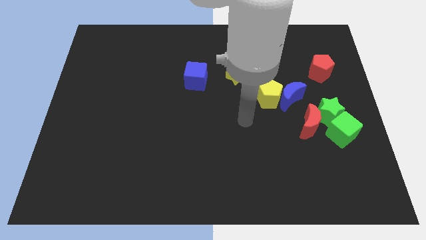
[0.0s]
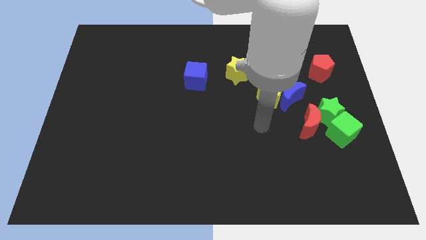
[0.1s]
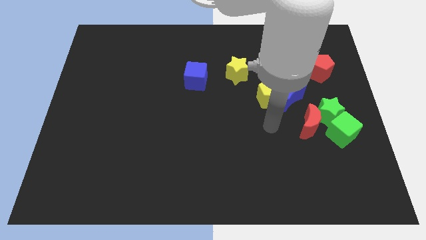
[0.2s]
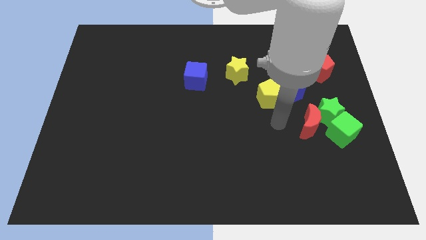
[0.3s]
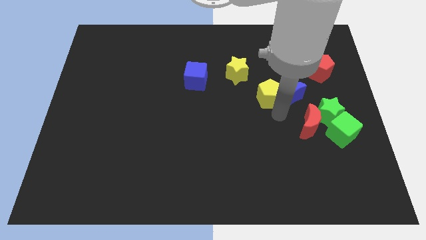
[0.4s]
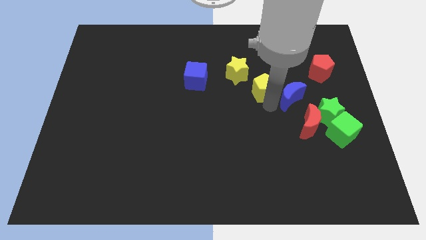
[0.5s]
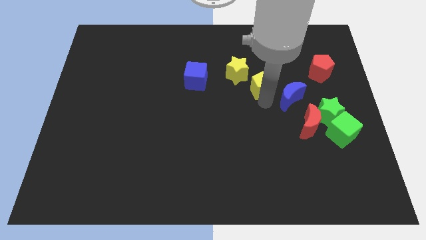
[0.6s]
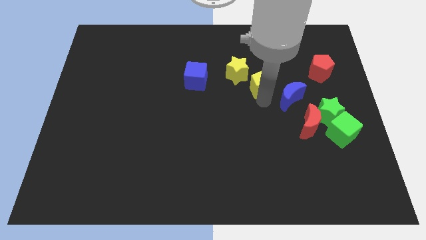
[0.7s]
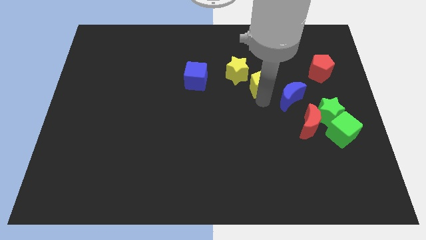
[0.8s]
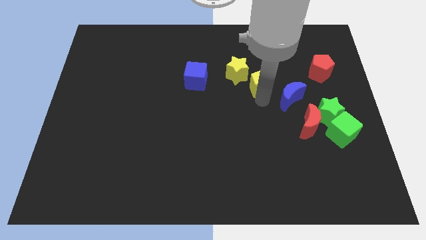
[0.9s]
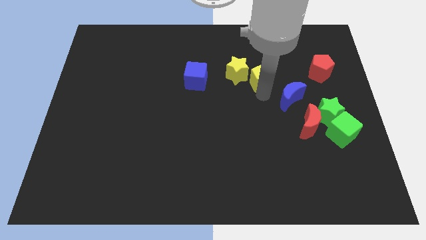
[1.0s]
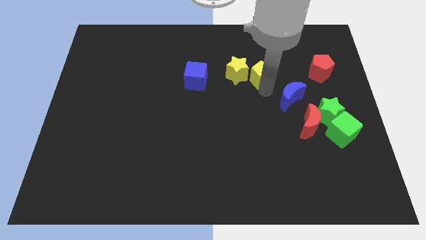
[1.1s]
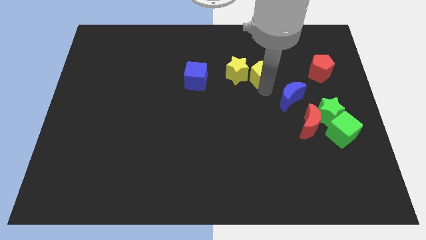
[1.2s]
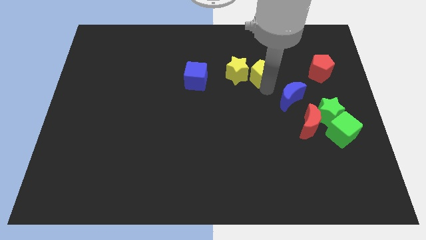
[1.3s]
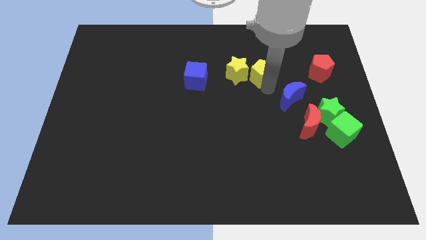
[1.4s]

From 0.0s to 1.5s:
move the yellow pentagon to the right of the yellow star

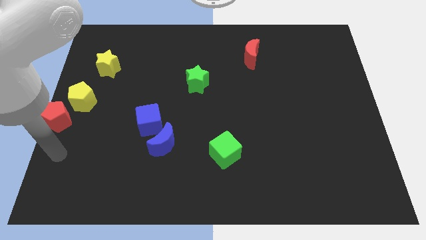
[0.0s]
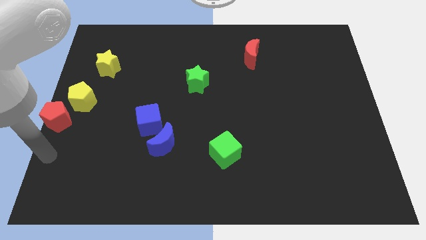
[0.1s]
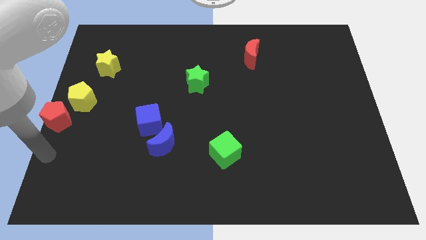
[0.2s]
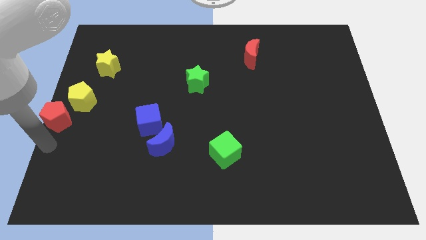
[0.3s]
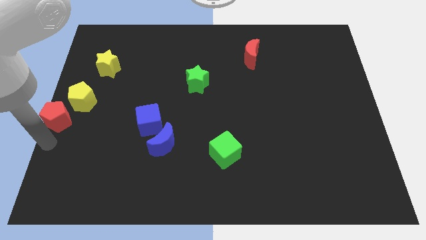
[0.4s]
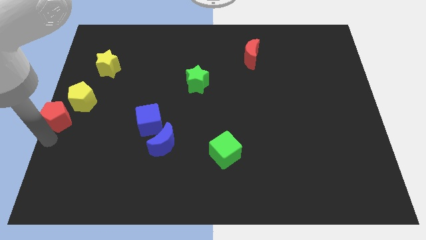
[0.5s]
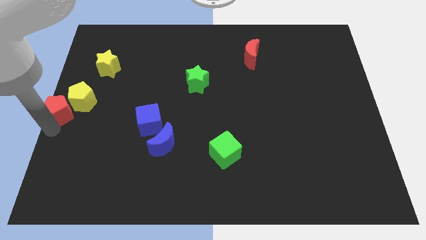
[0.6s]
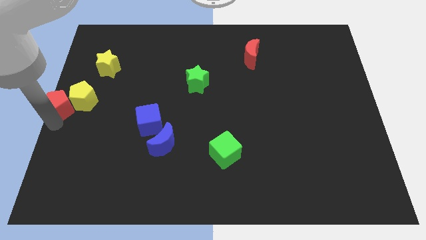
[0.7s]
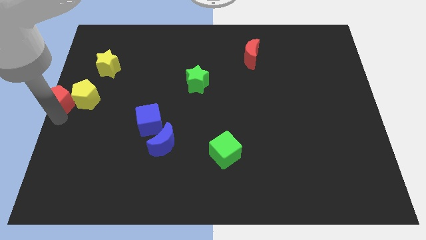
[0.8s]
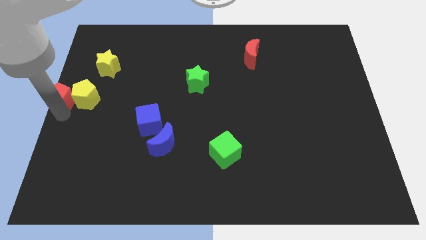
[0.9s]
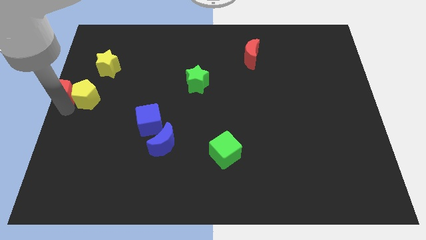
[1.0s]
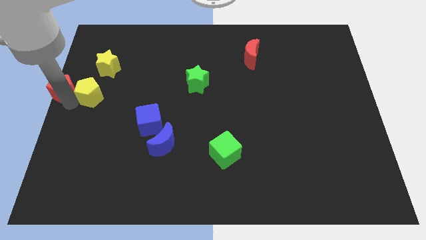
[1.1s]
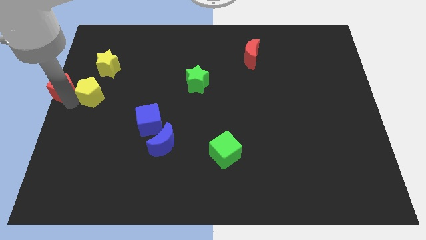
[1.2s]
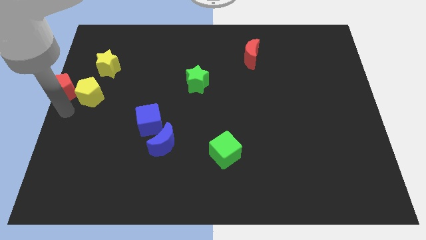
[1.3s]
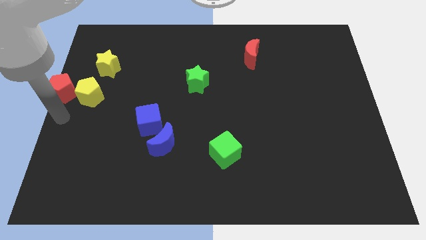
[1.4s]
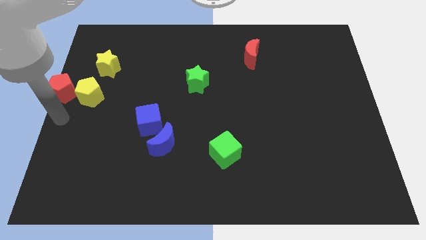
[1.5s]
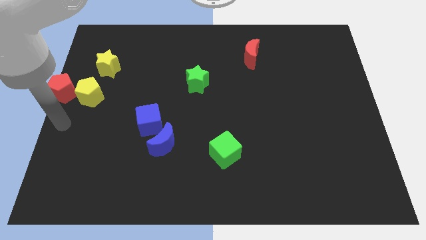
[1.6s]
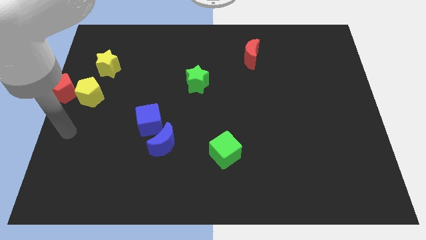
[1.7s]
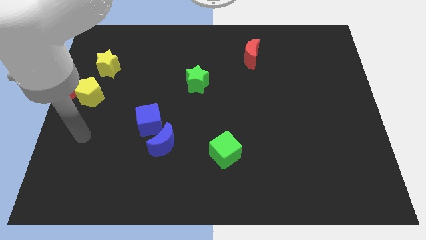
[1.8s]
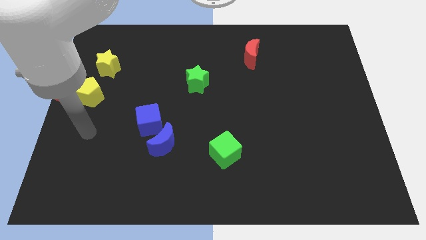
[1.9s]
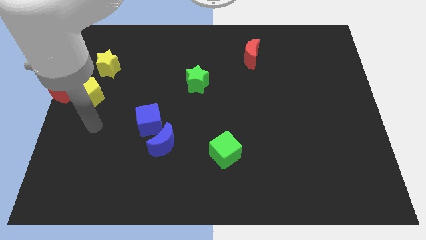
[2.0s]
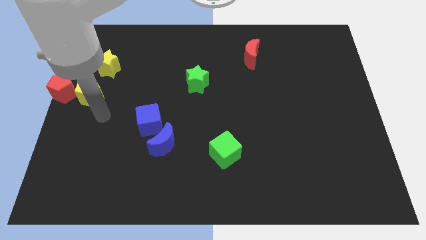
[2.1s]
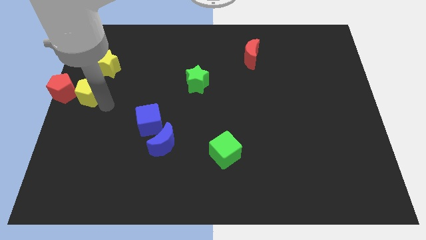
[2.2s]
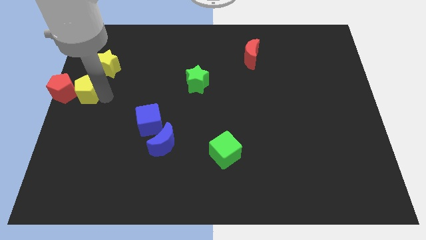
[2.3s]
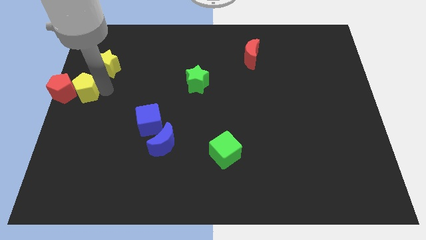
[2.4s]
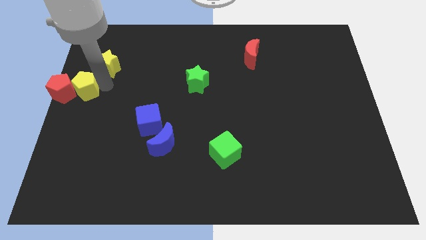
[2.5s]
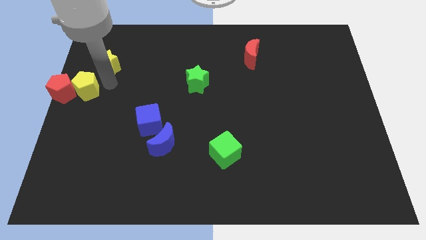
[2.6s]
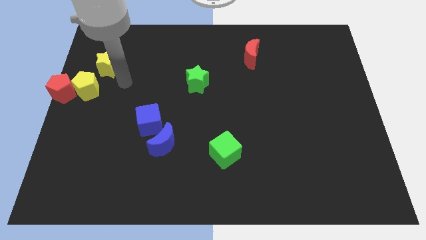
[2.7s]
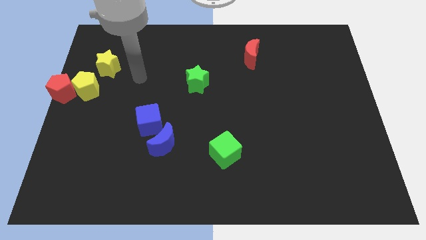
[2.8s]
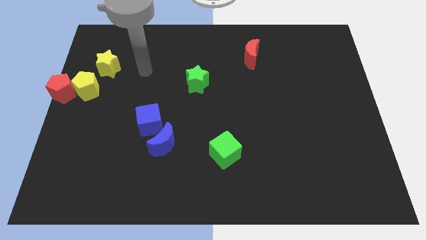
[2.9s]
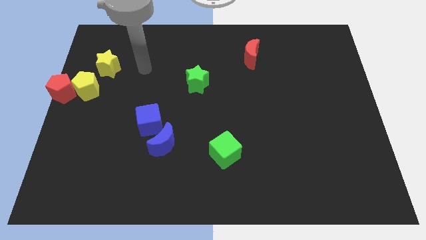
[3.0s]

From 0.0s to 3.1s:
place red pentagon to the left of yellow pentagon

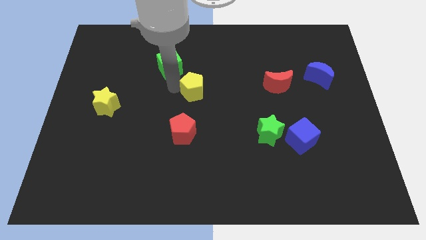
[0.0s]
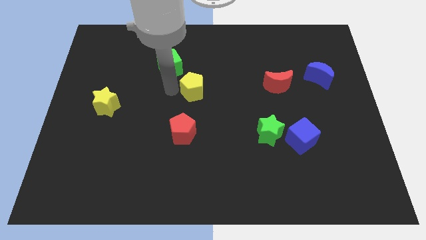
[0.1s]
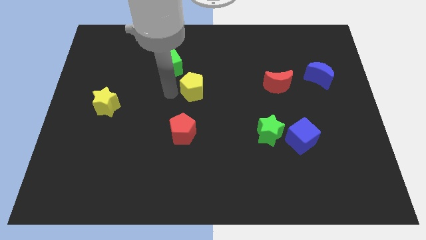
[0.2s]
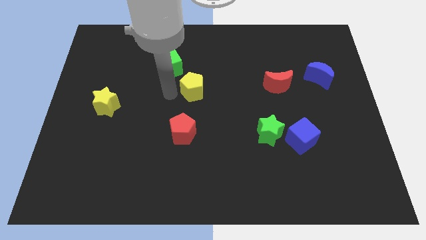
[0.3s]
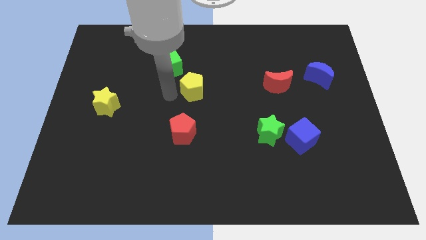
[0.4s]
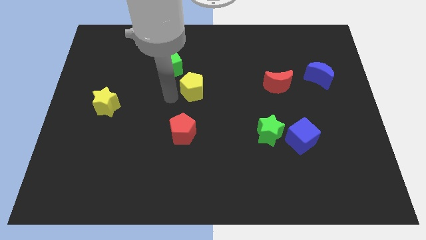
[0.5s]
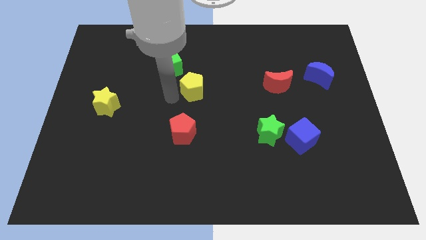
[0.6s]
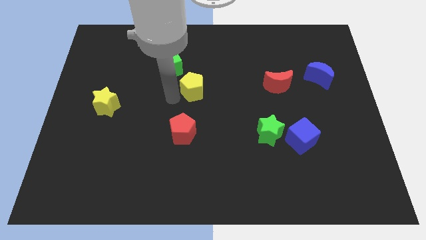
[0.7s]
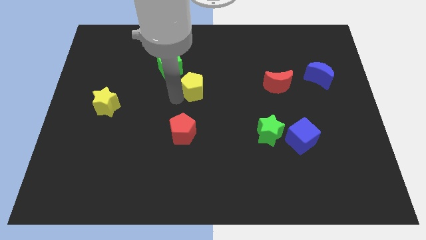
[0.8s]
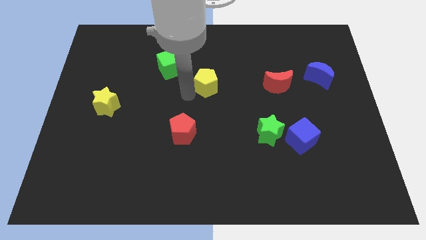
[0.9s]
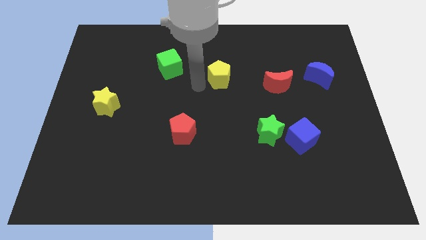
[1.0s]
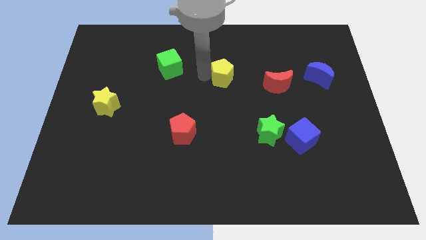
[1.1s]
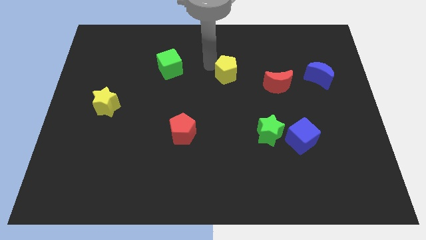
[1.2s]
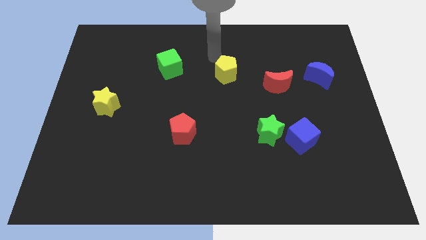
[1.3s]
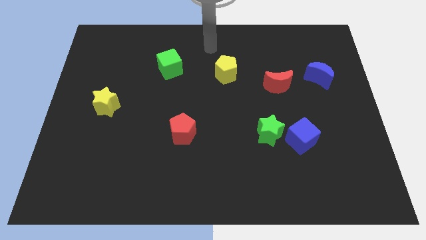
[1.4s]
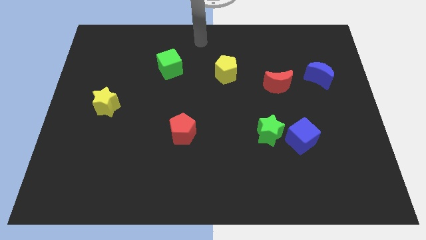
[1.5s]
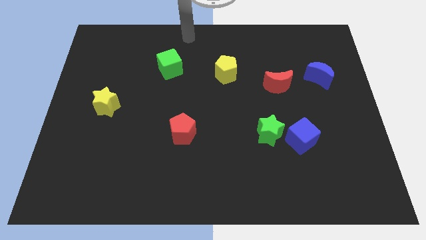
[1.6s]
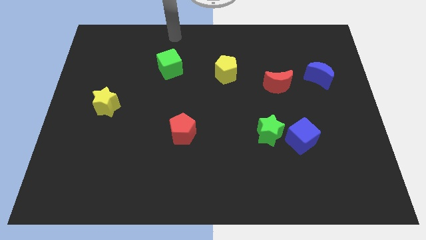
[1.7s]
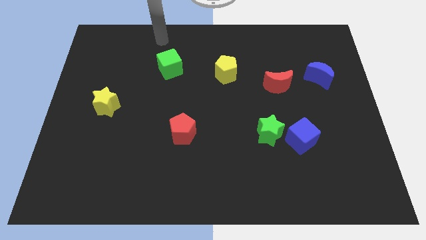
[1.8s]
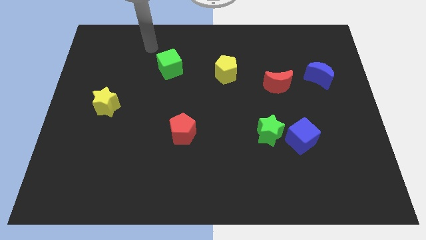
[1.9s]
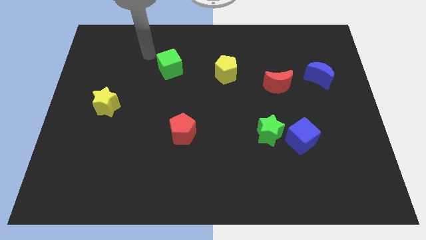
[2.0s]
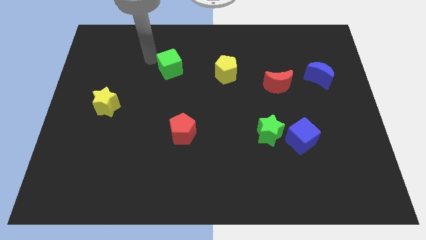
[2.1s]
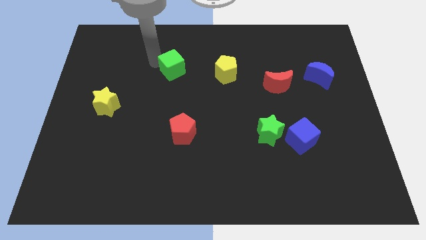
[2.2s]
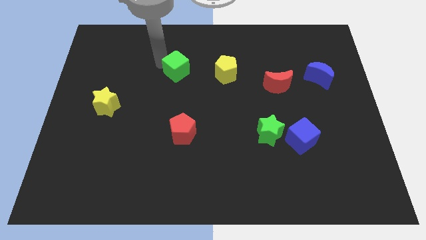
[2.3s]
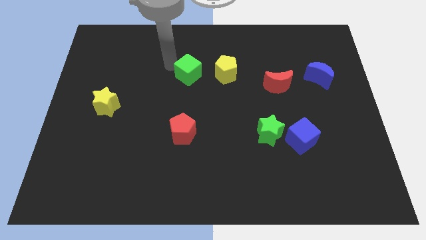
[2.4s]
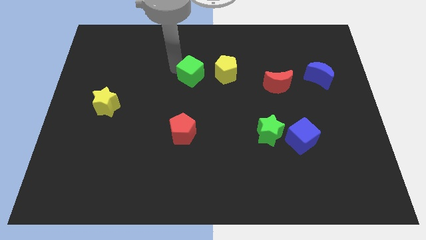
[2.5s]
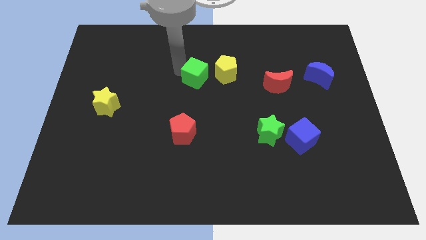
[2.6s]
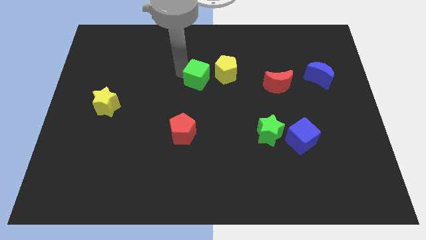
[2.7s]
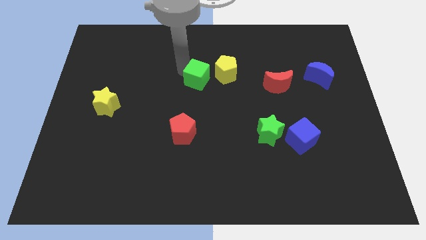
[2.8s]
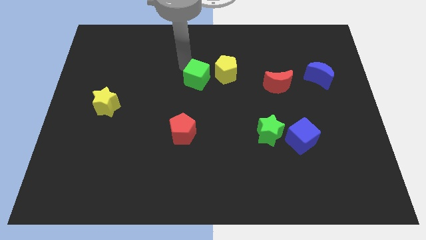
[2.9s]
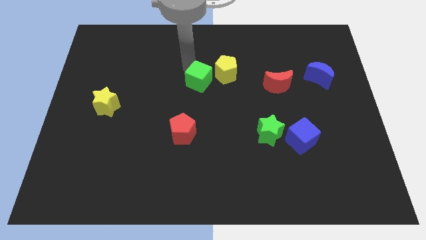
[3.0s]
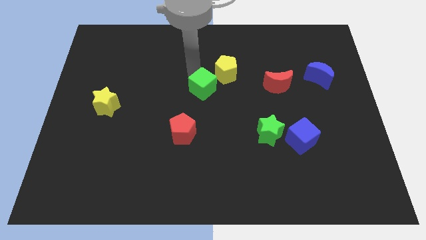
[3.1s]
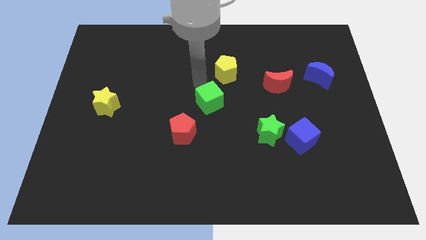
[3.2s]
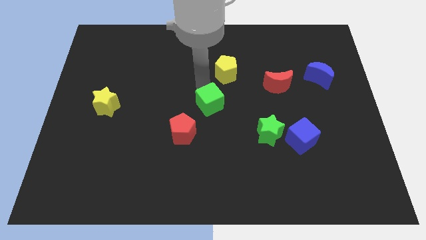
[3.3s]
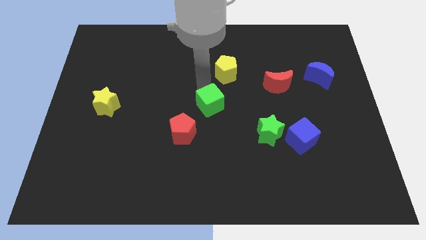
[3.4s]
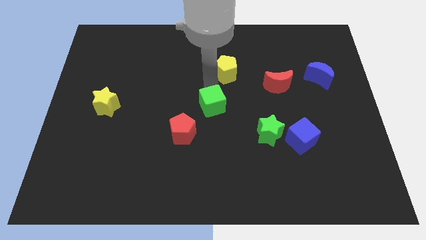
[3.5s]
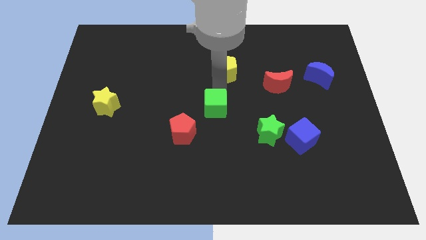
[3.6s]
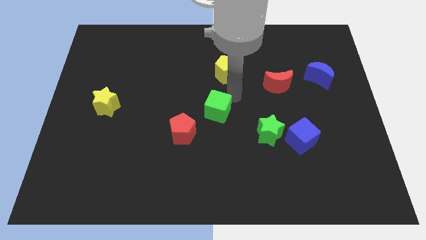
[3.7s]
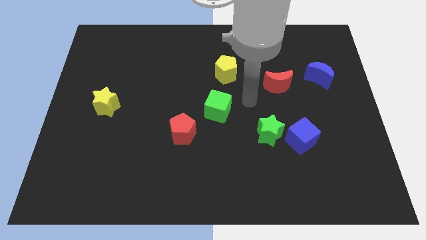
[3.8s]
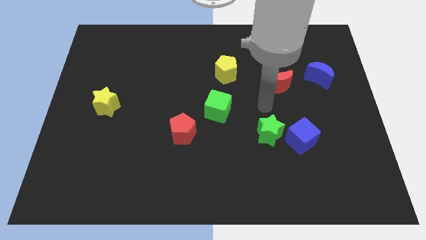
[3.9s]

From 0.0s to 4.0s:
put yellow pentagon and green cube in a vertical line

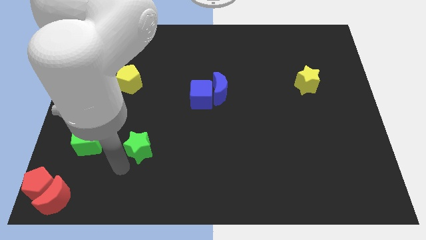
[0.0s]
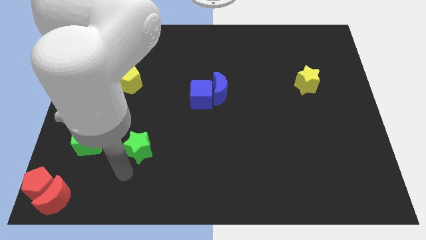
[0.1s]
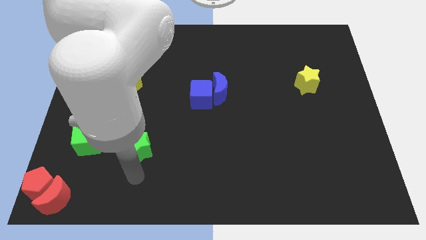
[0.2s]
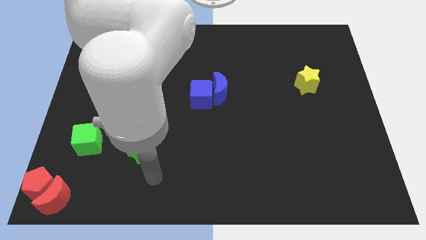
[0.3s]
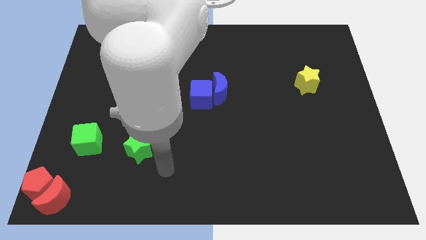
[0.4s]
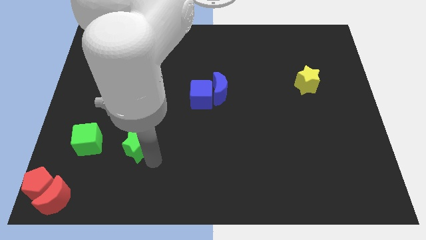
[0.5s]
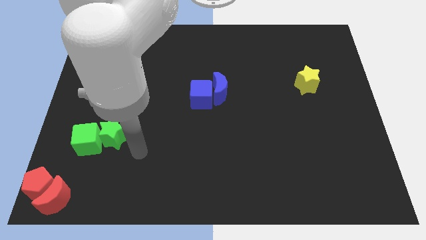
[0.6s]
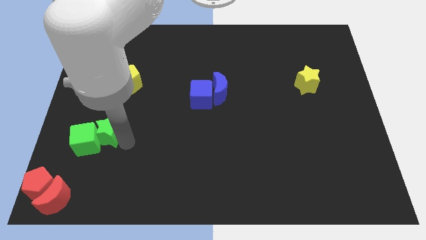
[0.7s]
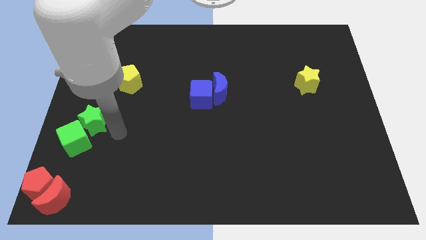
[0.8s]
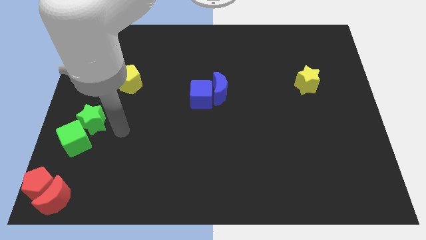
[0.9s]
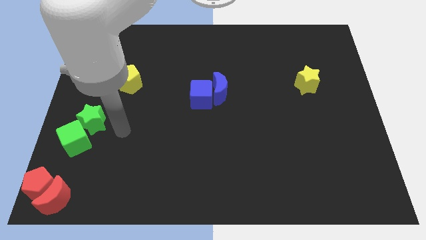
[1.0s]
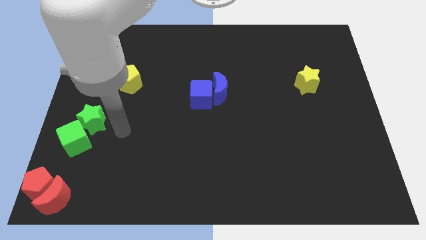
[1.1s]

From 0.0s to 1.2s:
push the green star towards the top of the green cube
